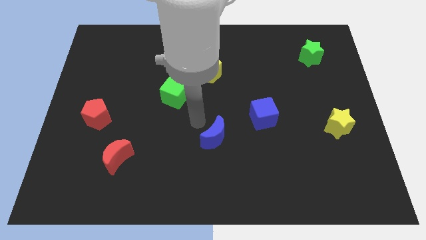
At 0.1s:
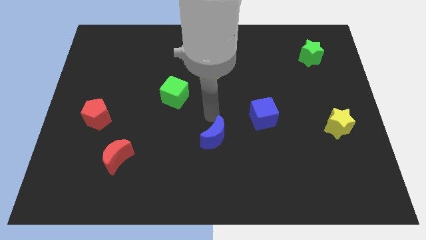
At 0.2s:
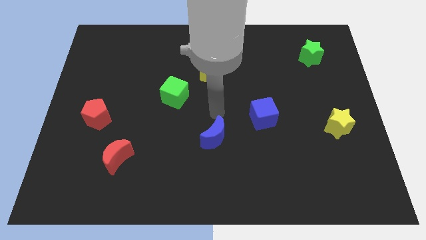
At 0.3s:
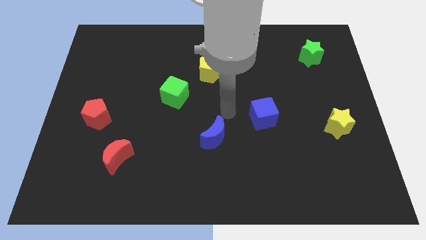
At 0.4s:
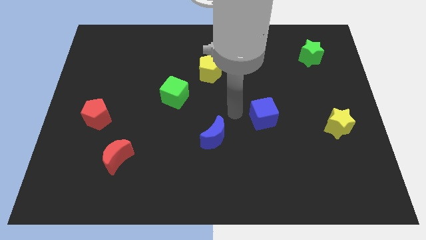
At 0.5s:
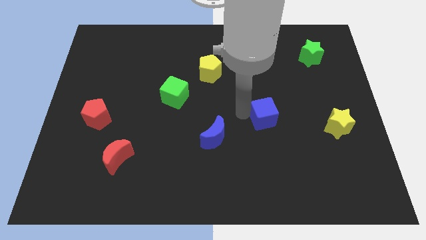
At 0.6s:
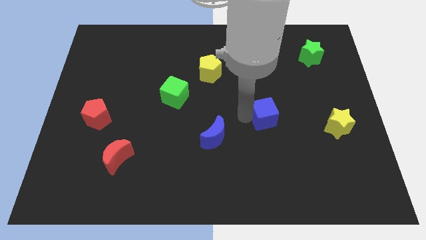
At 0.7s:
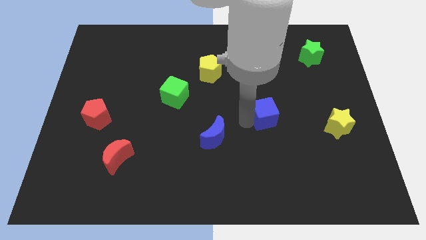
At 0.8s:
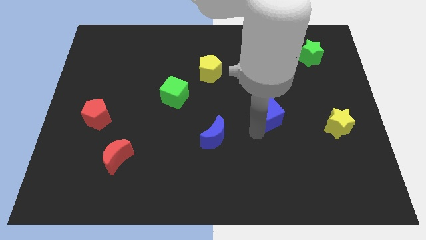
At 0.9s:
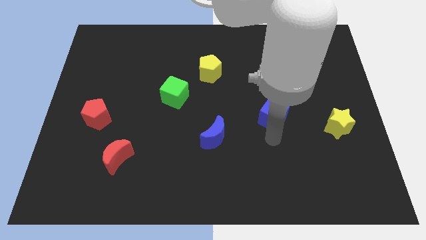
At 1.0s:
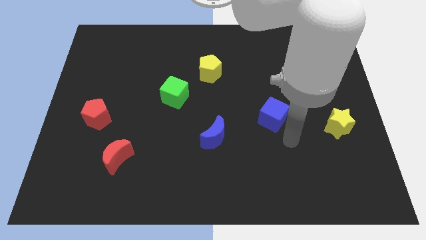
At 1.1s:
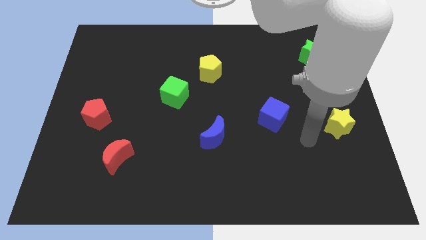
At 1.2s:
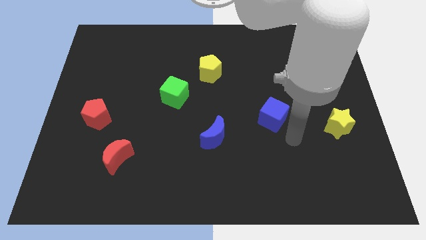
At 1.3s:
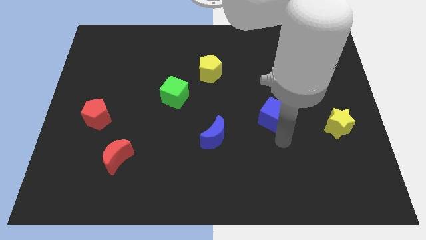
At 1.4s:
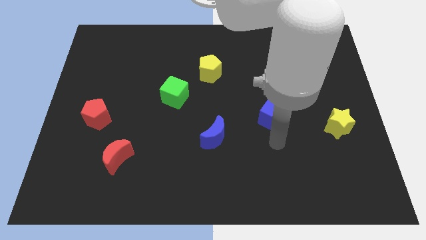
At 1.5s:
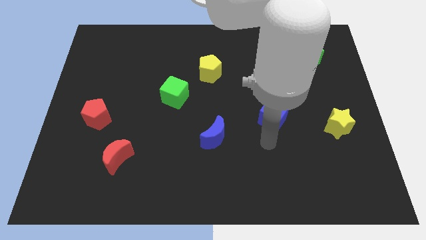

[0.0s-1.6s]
slightly push the blue cube to the right of the board

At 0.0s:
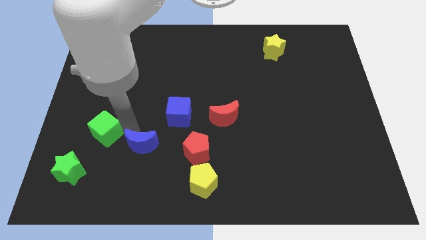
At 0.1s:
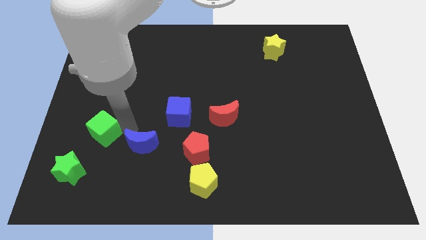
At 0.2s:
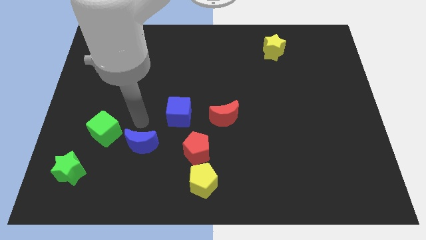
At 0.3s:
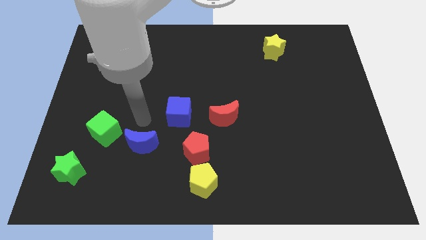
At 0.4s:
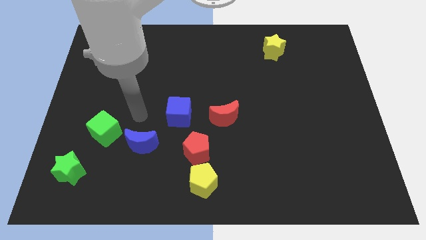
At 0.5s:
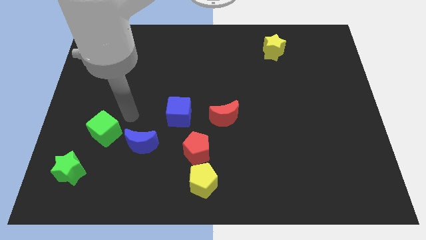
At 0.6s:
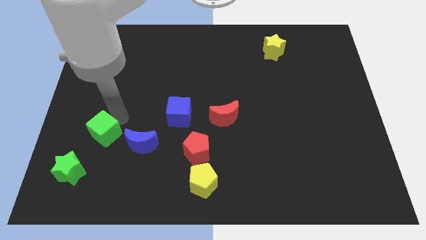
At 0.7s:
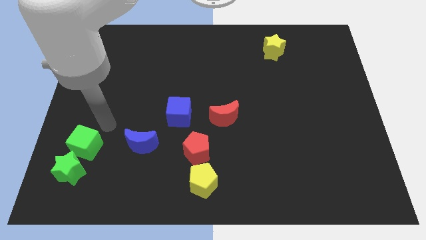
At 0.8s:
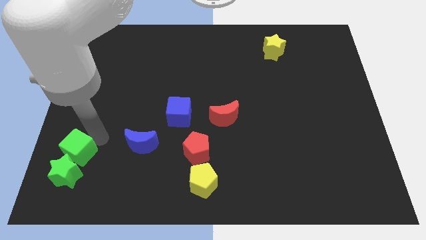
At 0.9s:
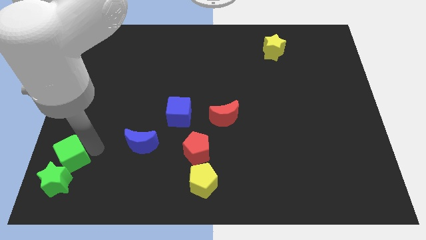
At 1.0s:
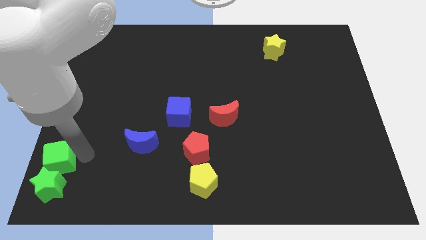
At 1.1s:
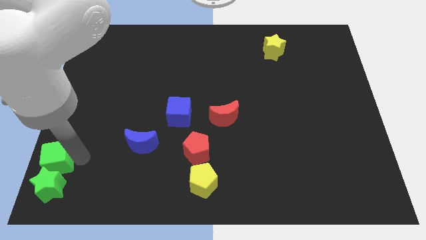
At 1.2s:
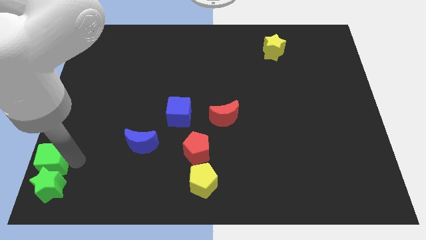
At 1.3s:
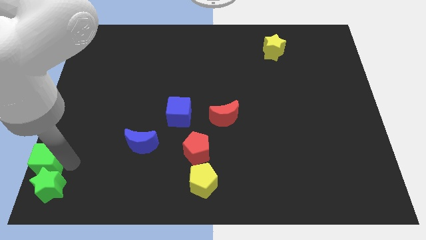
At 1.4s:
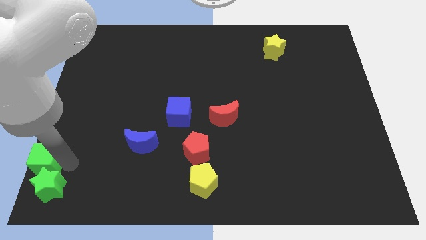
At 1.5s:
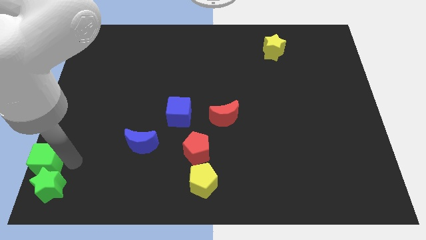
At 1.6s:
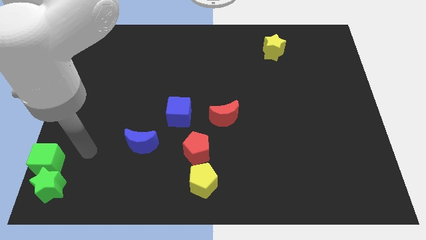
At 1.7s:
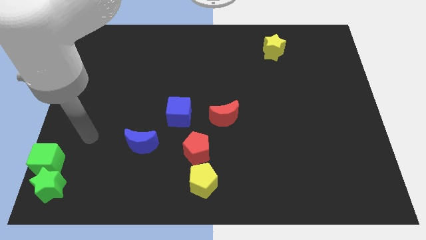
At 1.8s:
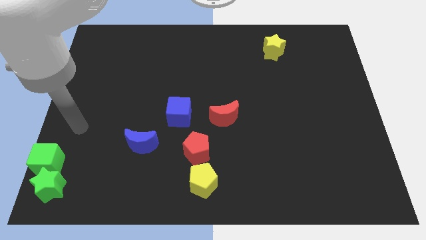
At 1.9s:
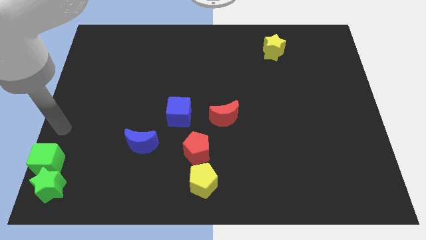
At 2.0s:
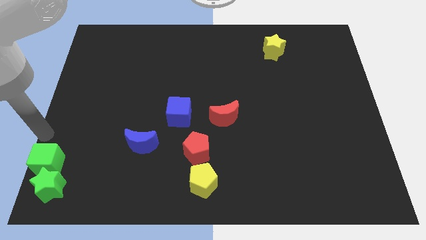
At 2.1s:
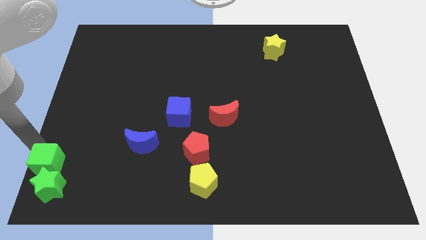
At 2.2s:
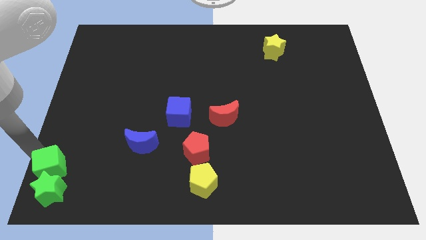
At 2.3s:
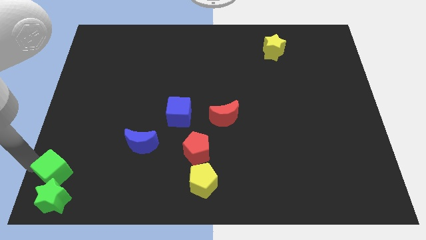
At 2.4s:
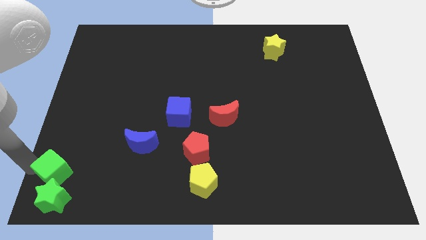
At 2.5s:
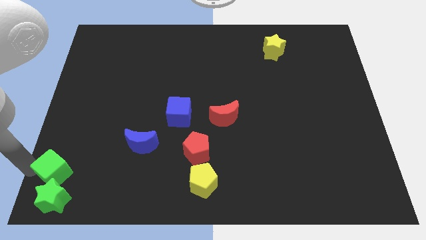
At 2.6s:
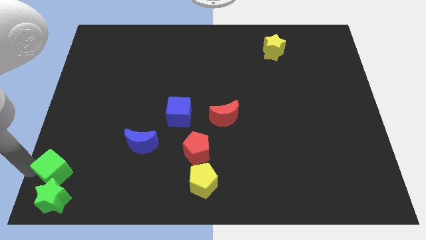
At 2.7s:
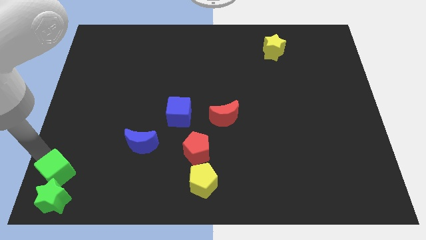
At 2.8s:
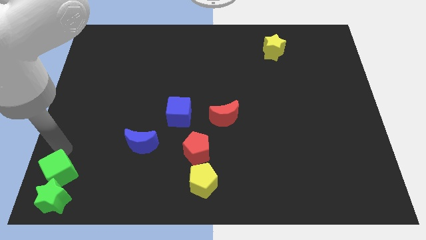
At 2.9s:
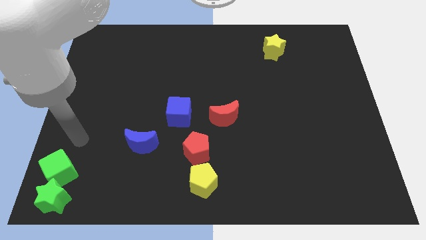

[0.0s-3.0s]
place green cube above green star

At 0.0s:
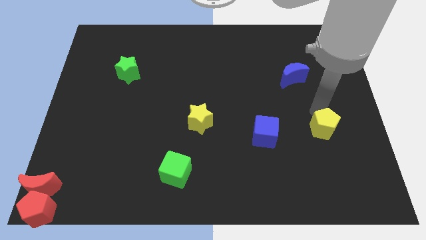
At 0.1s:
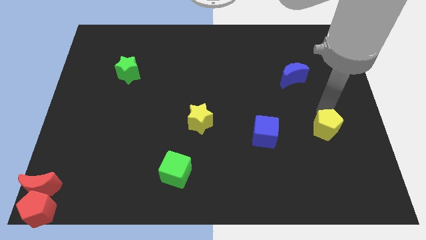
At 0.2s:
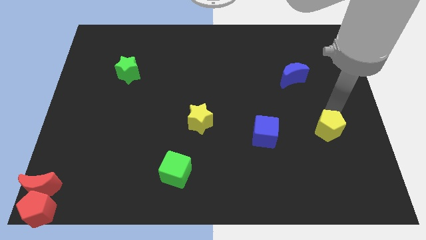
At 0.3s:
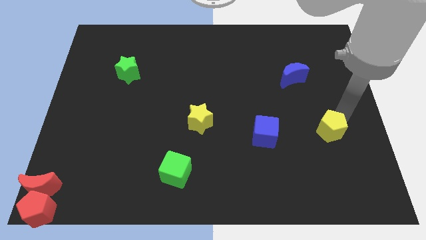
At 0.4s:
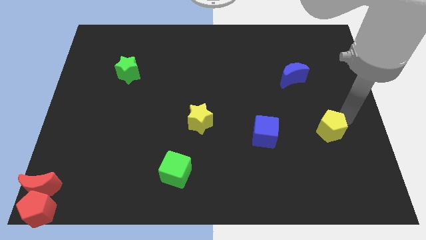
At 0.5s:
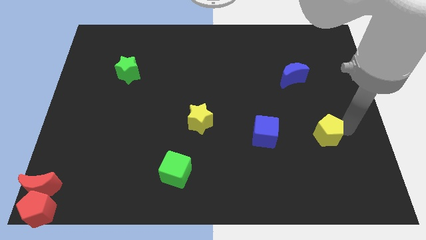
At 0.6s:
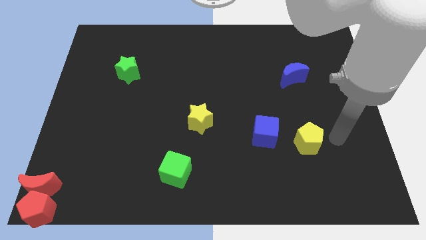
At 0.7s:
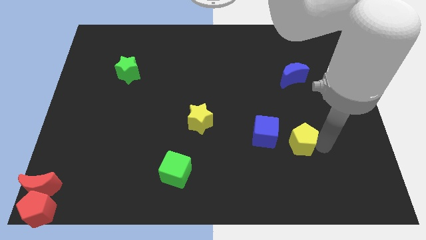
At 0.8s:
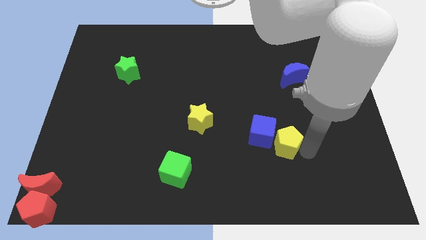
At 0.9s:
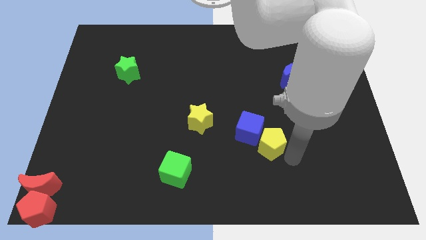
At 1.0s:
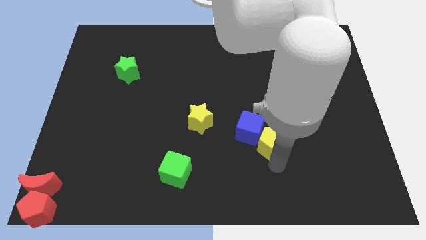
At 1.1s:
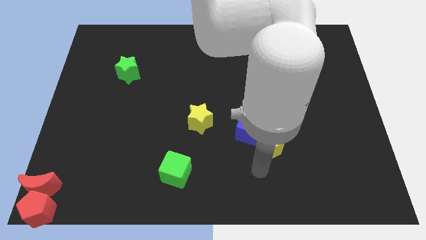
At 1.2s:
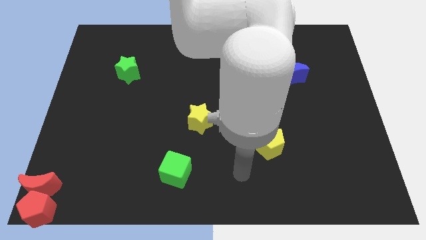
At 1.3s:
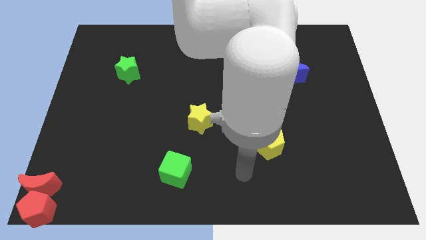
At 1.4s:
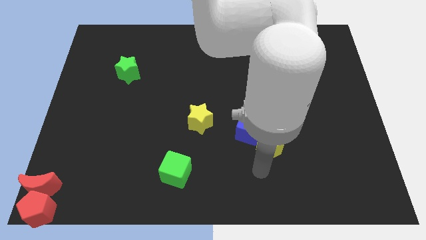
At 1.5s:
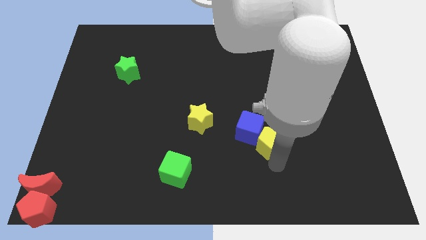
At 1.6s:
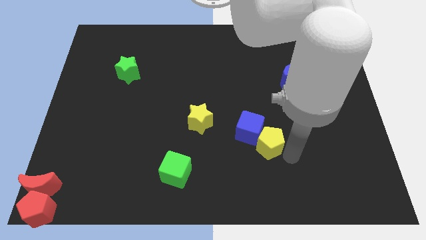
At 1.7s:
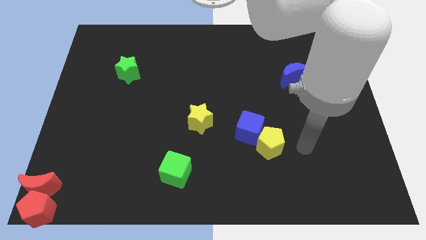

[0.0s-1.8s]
push the yellow pentagon into blue cube

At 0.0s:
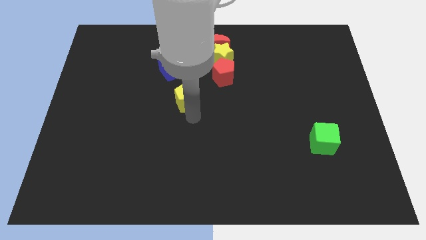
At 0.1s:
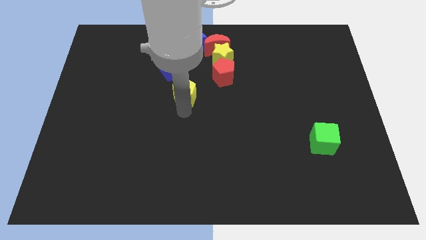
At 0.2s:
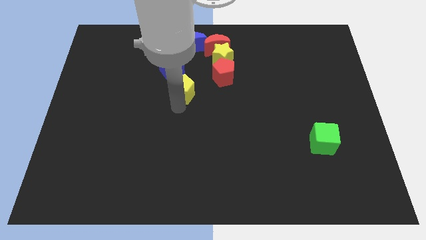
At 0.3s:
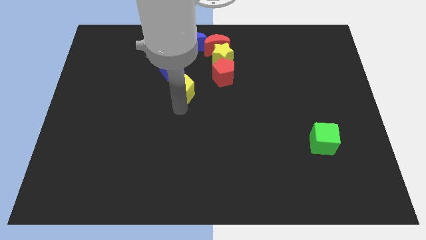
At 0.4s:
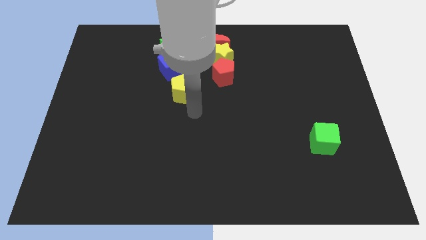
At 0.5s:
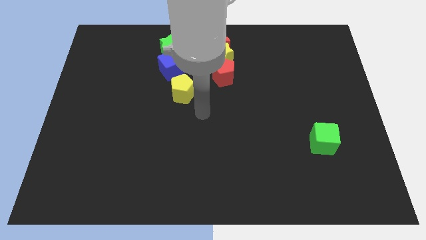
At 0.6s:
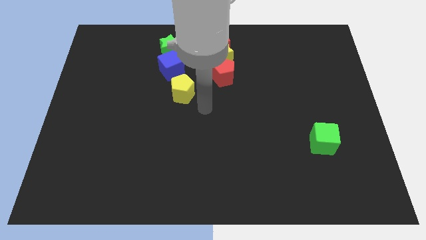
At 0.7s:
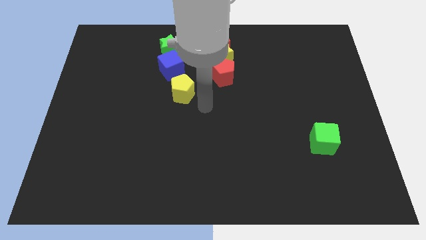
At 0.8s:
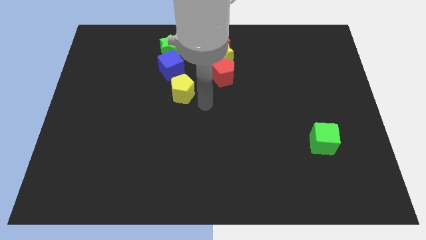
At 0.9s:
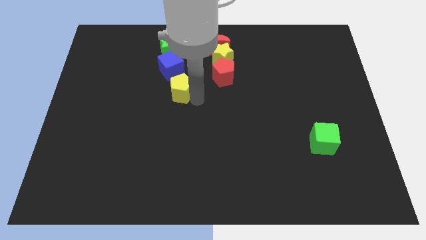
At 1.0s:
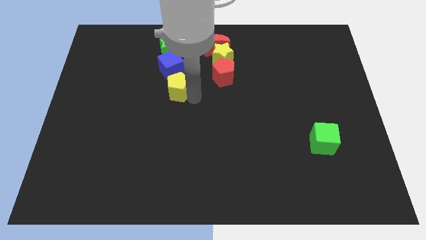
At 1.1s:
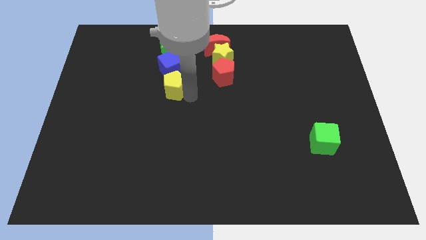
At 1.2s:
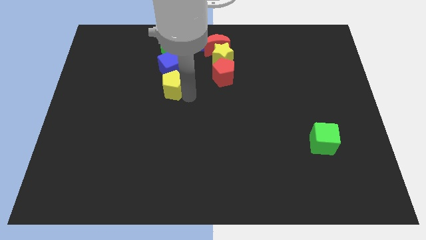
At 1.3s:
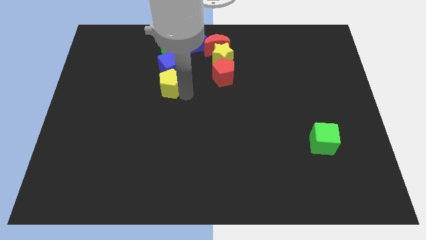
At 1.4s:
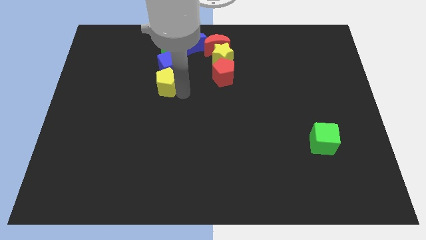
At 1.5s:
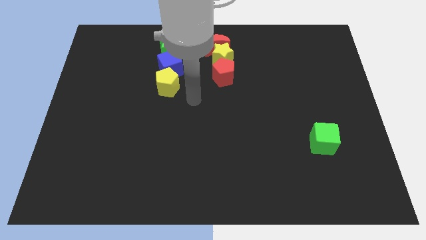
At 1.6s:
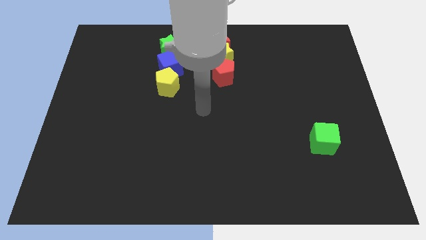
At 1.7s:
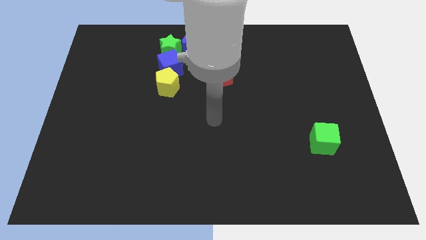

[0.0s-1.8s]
put the yellow pentagon below the blue cube

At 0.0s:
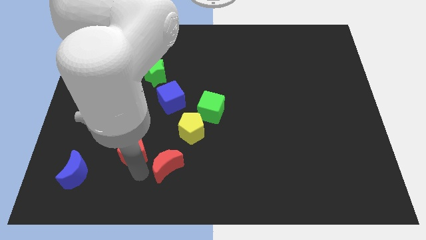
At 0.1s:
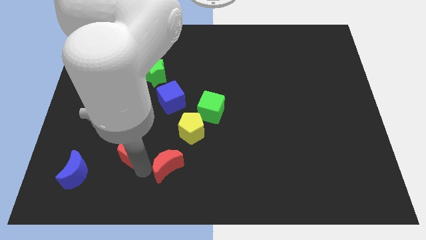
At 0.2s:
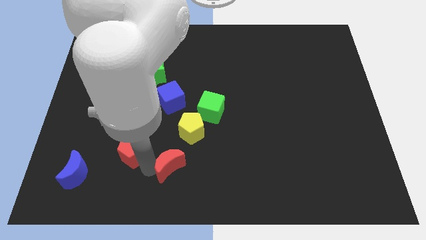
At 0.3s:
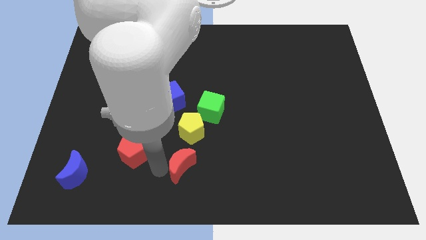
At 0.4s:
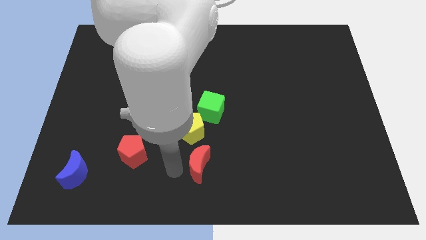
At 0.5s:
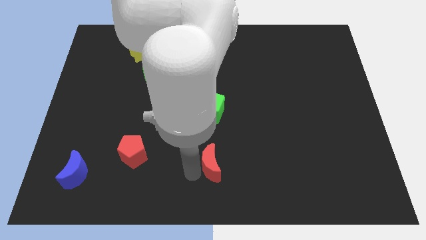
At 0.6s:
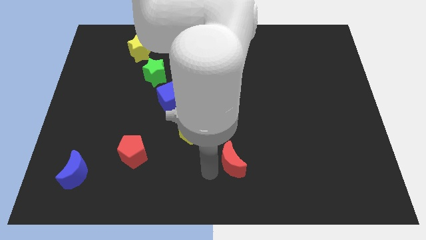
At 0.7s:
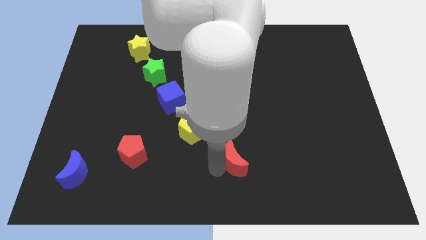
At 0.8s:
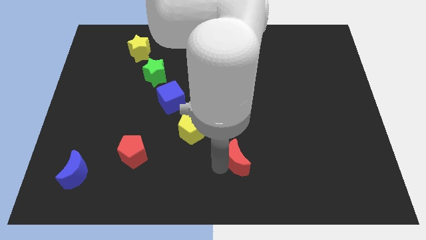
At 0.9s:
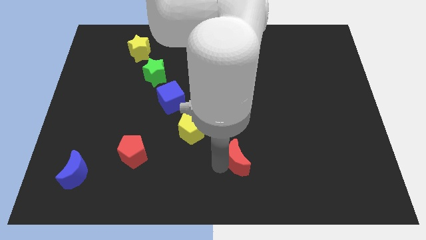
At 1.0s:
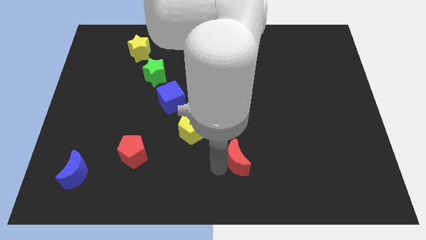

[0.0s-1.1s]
move the red moon to the right side slightly
